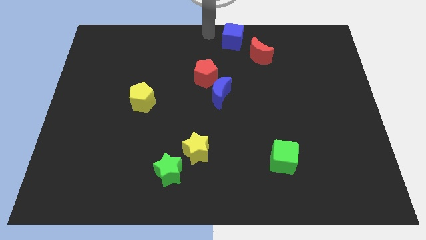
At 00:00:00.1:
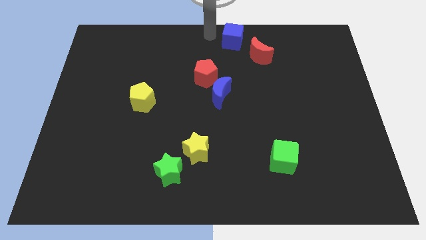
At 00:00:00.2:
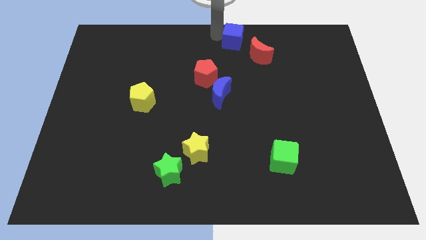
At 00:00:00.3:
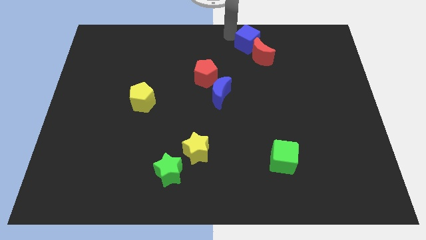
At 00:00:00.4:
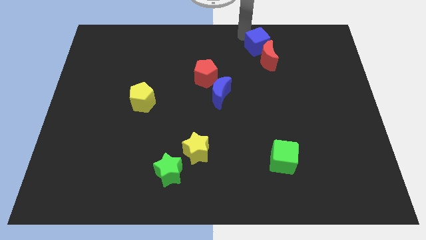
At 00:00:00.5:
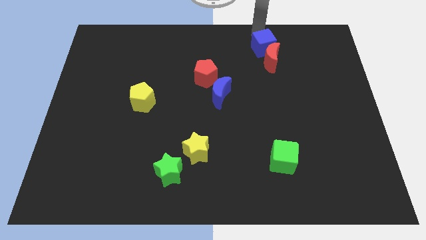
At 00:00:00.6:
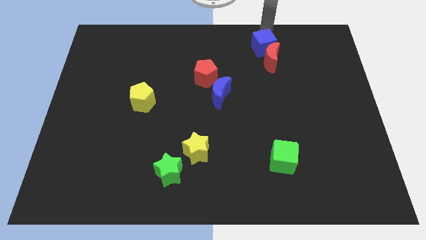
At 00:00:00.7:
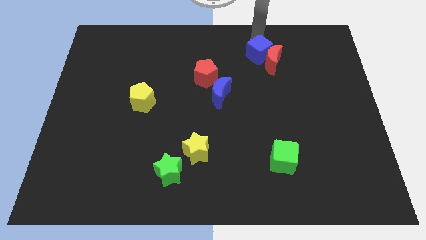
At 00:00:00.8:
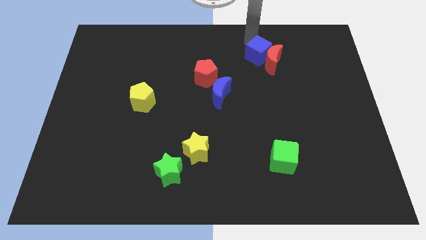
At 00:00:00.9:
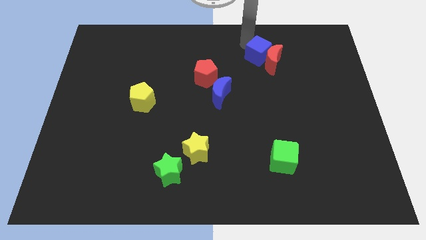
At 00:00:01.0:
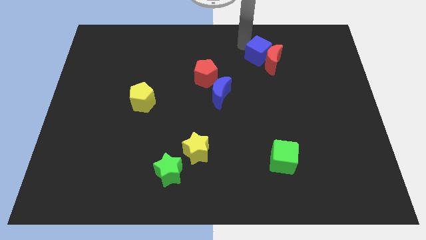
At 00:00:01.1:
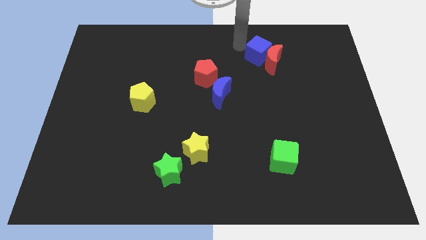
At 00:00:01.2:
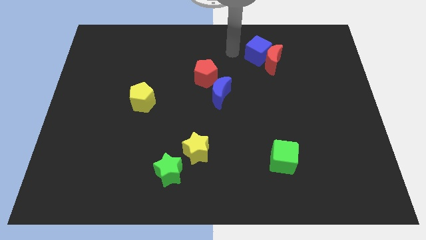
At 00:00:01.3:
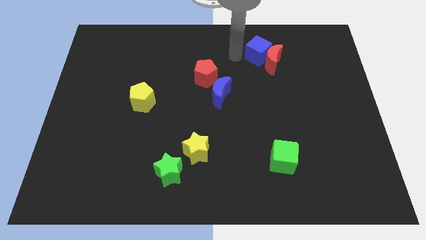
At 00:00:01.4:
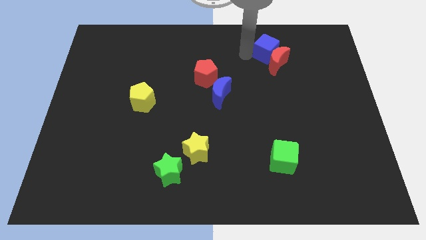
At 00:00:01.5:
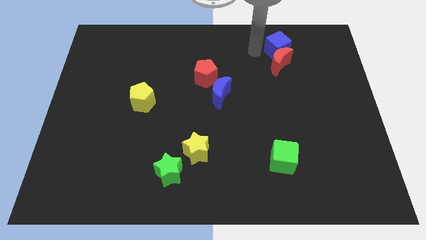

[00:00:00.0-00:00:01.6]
push the blue cube into the red moon

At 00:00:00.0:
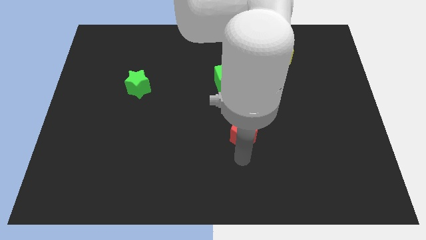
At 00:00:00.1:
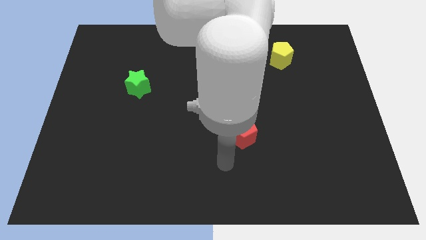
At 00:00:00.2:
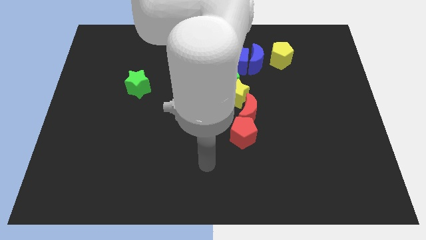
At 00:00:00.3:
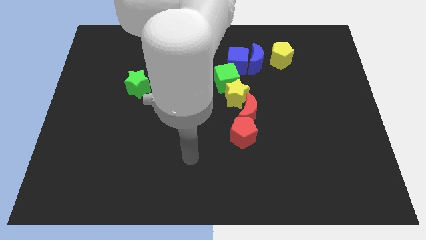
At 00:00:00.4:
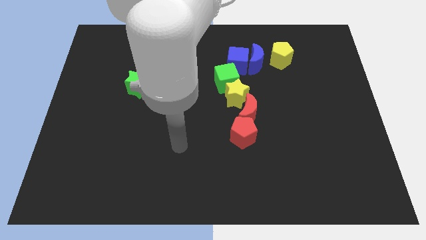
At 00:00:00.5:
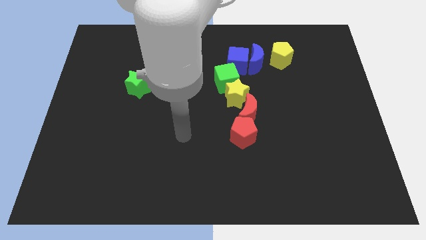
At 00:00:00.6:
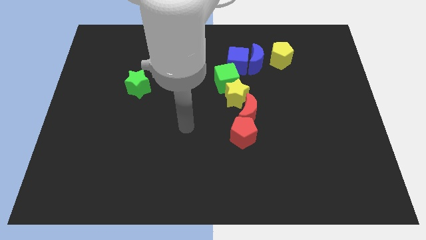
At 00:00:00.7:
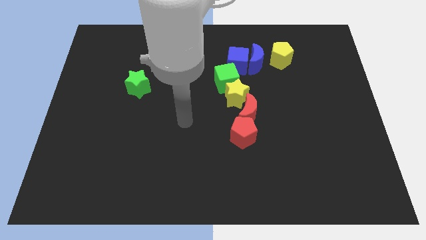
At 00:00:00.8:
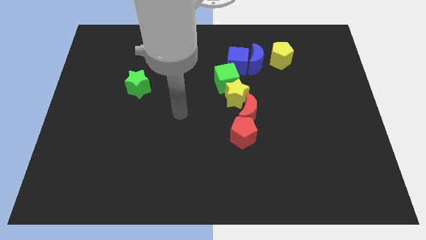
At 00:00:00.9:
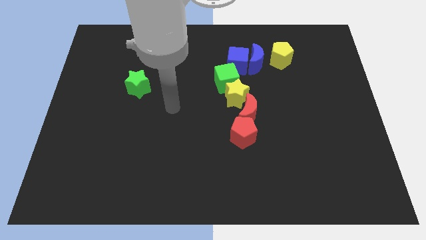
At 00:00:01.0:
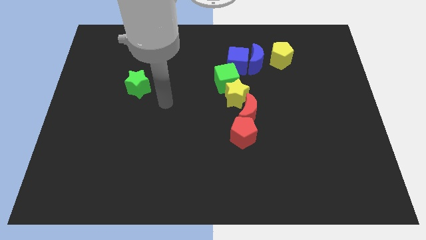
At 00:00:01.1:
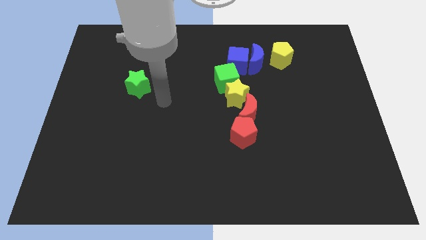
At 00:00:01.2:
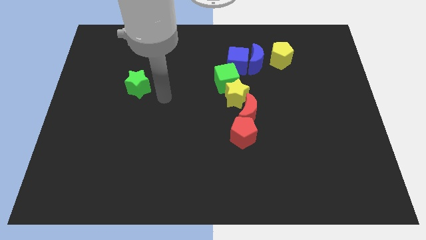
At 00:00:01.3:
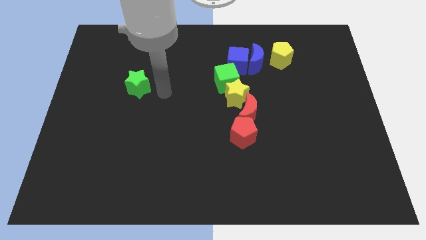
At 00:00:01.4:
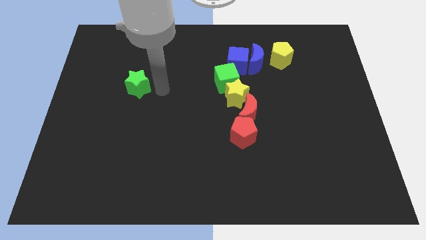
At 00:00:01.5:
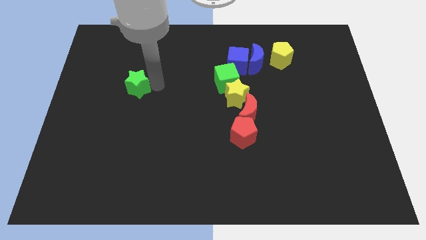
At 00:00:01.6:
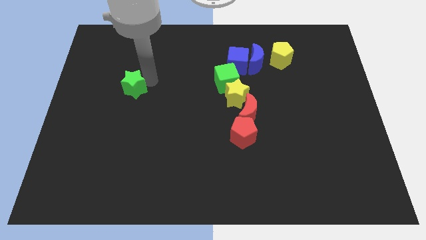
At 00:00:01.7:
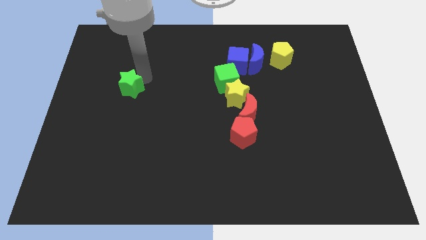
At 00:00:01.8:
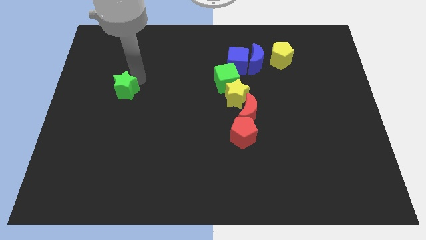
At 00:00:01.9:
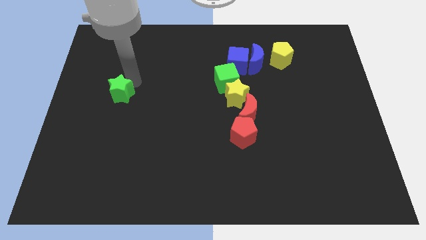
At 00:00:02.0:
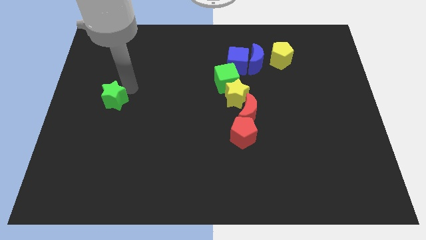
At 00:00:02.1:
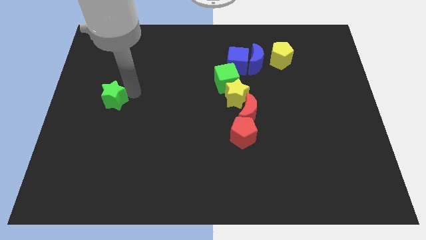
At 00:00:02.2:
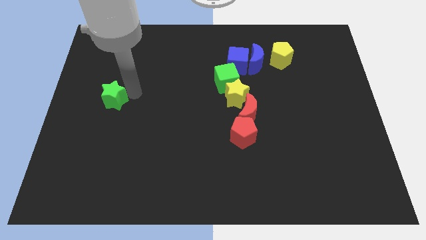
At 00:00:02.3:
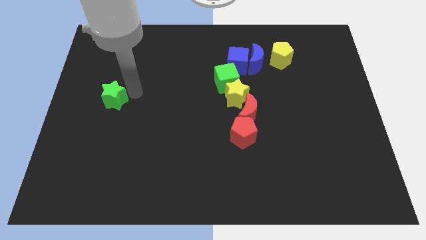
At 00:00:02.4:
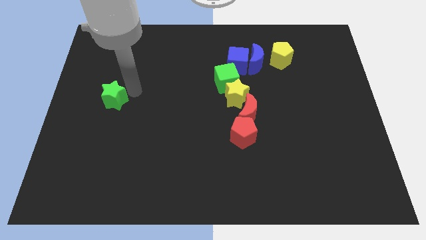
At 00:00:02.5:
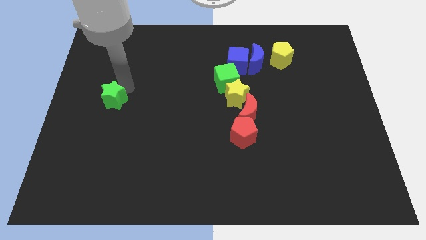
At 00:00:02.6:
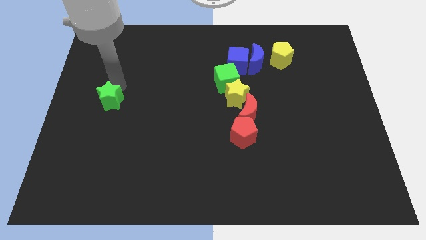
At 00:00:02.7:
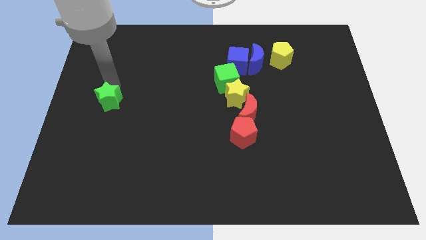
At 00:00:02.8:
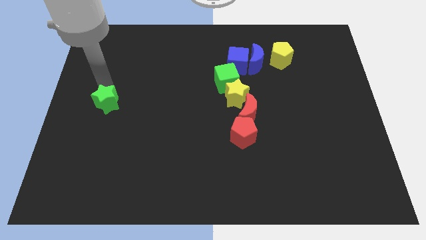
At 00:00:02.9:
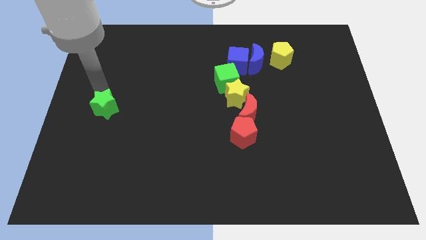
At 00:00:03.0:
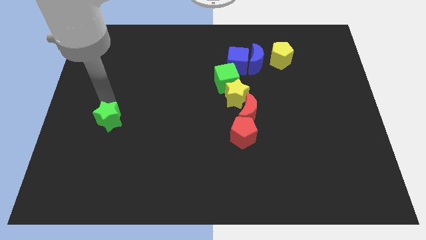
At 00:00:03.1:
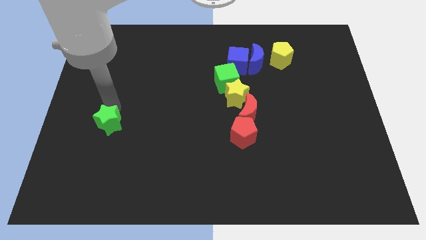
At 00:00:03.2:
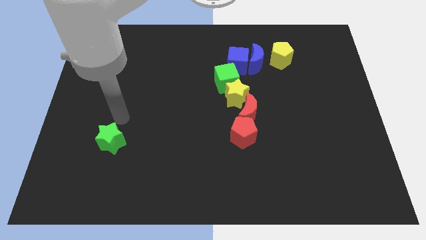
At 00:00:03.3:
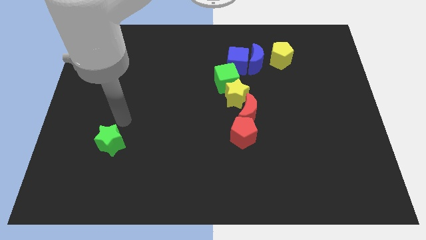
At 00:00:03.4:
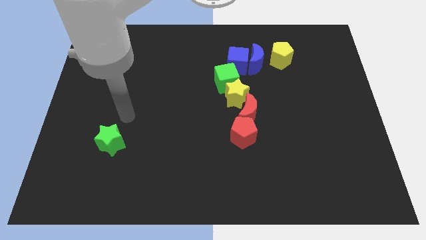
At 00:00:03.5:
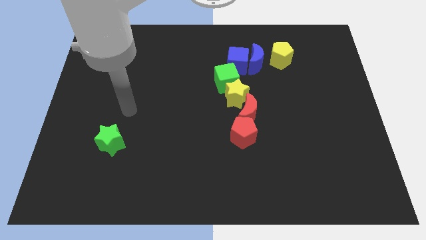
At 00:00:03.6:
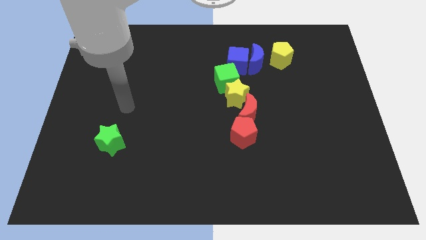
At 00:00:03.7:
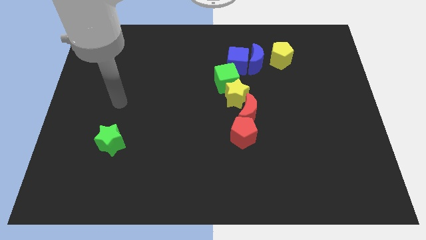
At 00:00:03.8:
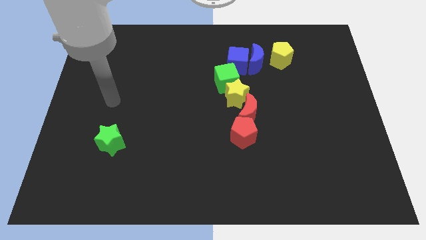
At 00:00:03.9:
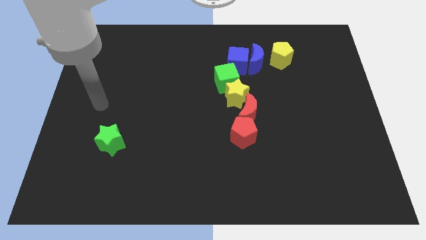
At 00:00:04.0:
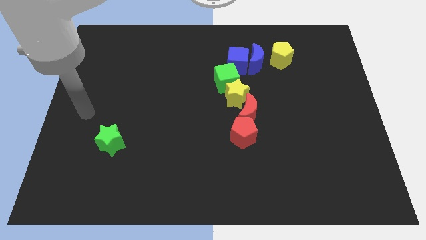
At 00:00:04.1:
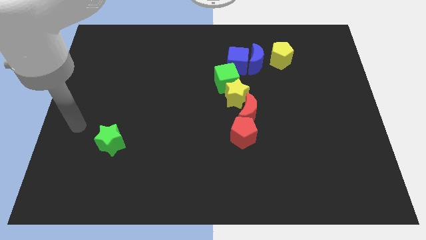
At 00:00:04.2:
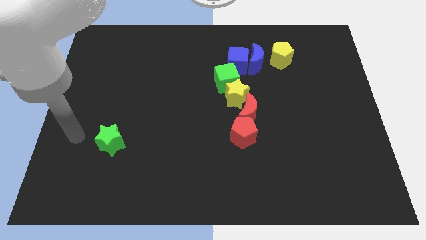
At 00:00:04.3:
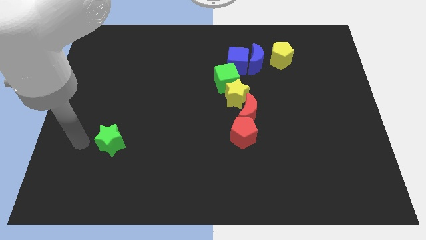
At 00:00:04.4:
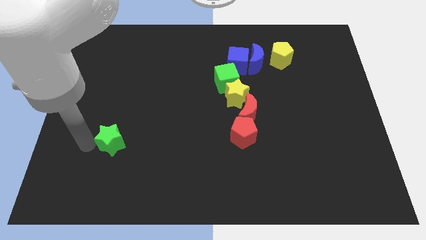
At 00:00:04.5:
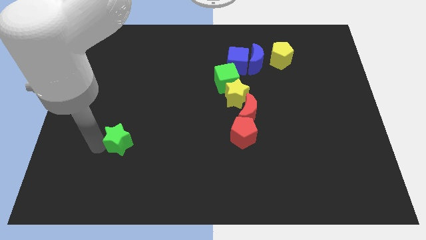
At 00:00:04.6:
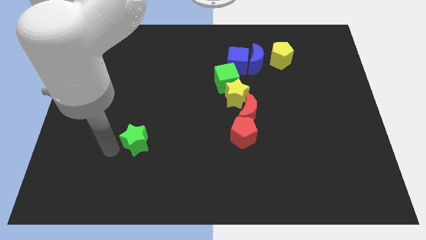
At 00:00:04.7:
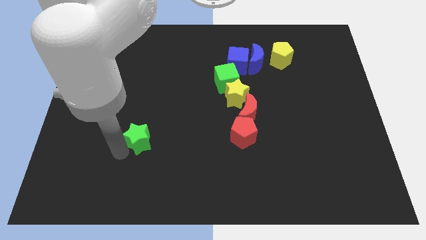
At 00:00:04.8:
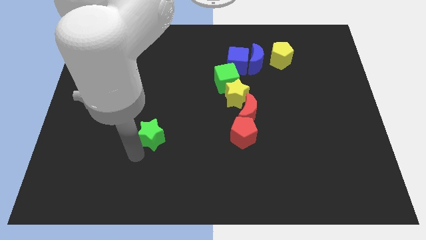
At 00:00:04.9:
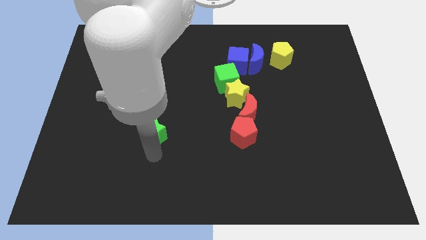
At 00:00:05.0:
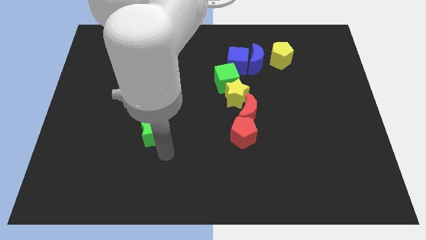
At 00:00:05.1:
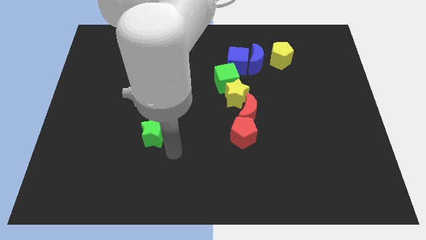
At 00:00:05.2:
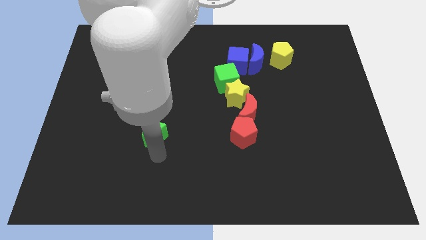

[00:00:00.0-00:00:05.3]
place the green star parallel to red pentagon

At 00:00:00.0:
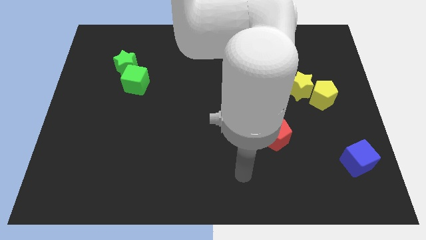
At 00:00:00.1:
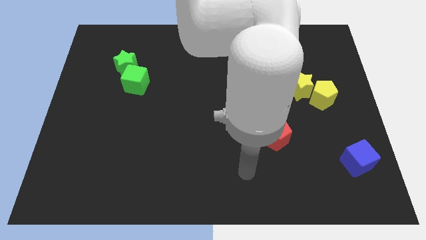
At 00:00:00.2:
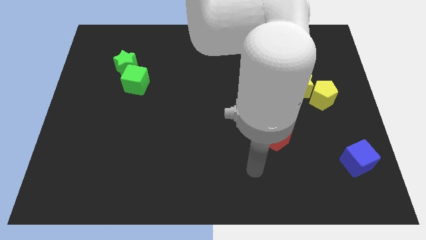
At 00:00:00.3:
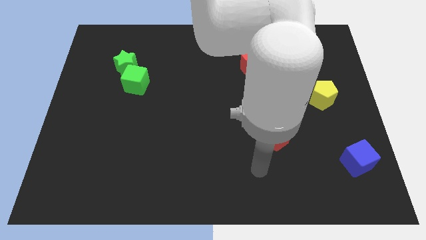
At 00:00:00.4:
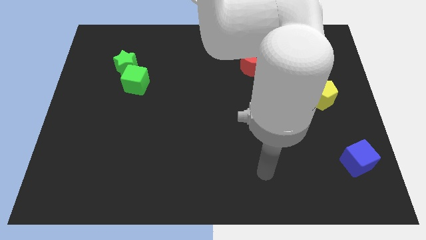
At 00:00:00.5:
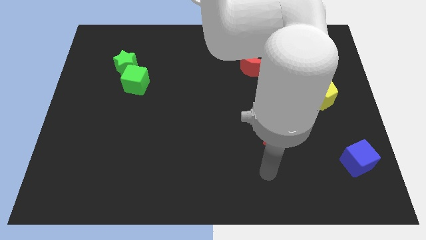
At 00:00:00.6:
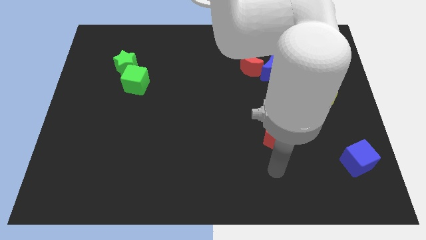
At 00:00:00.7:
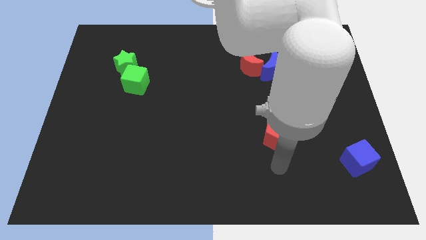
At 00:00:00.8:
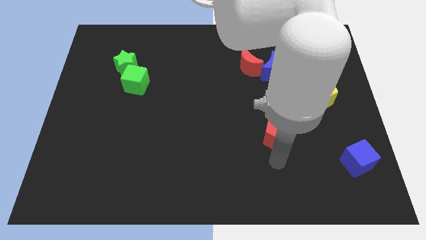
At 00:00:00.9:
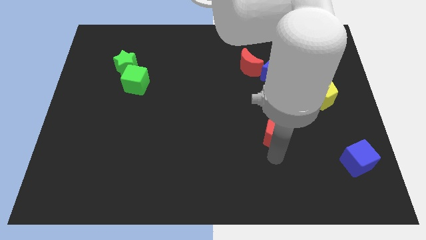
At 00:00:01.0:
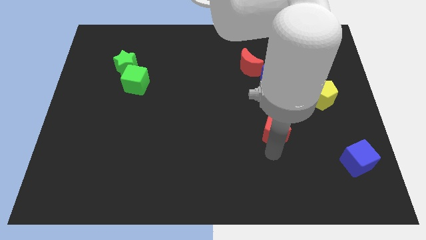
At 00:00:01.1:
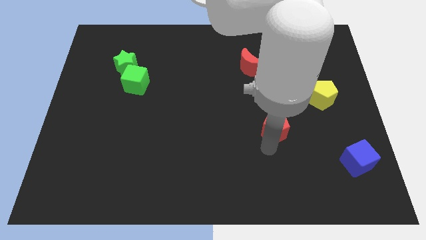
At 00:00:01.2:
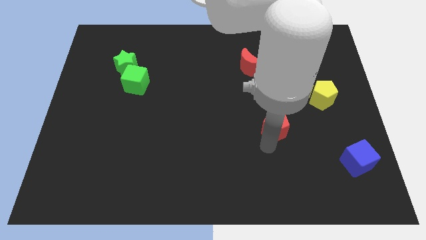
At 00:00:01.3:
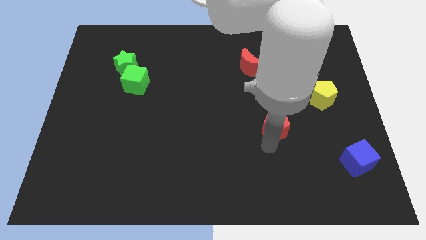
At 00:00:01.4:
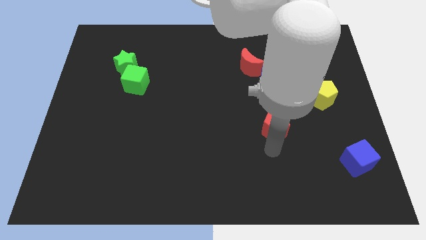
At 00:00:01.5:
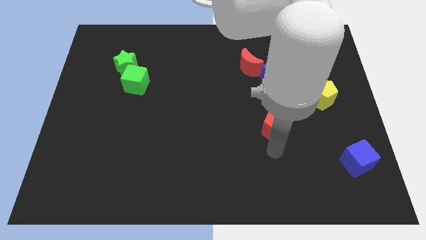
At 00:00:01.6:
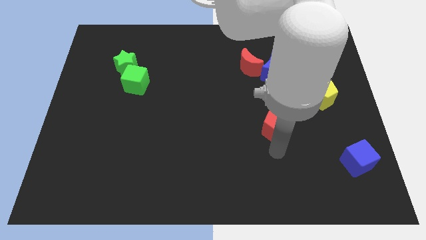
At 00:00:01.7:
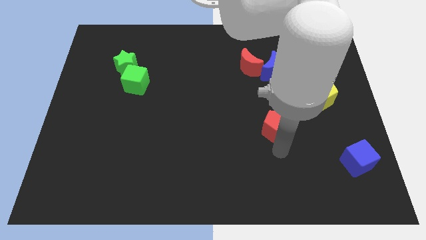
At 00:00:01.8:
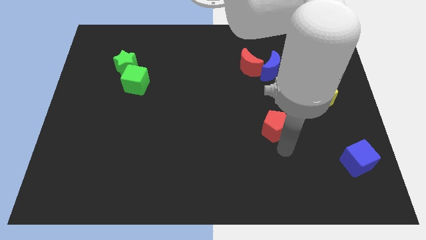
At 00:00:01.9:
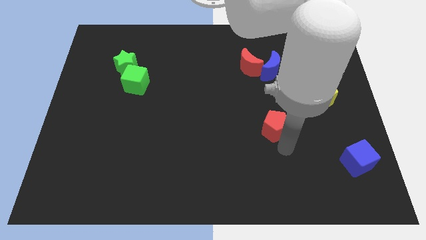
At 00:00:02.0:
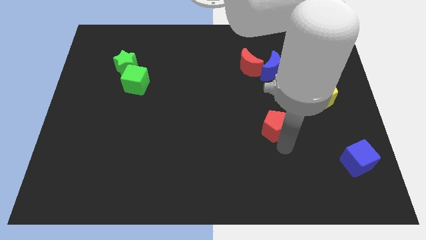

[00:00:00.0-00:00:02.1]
move the red pentagon slightly up
